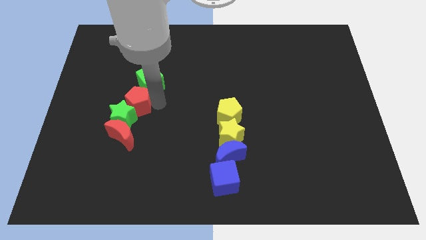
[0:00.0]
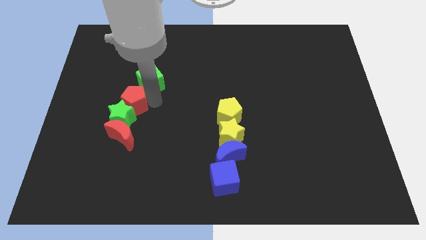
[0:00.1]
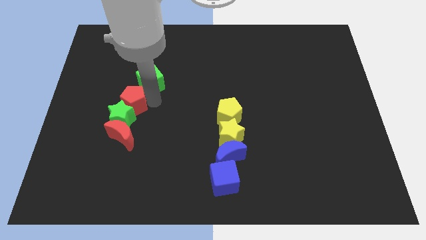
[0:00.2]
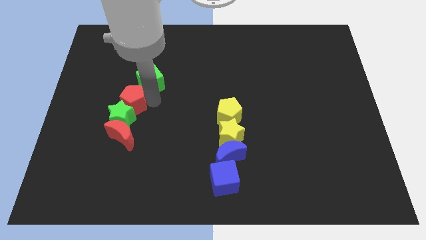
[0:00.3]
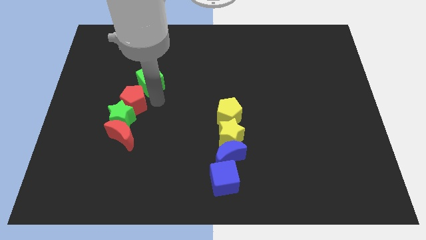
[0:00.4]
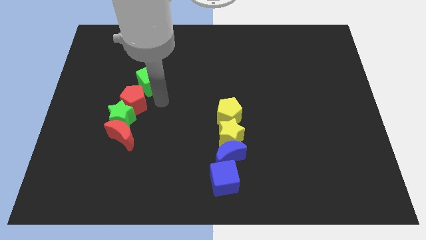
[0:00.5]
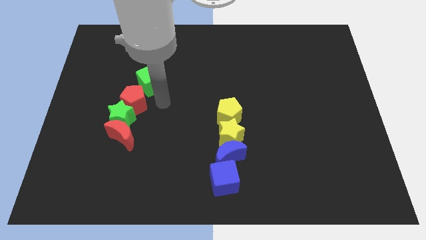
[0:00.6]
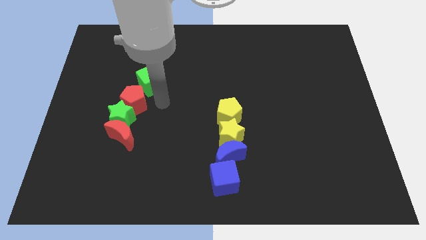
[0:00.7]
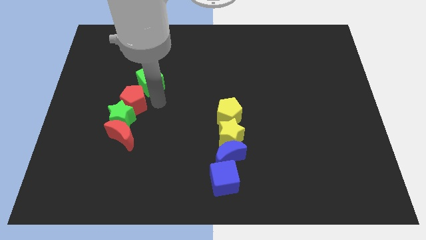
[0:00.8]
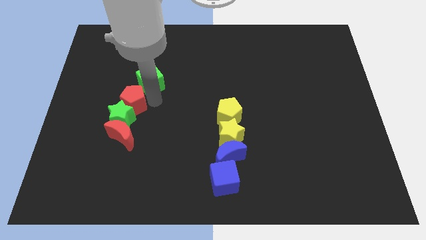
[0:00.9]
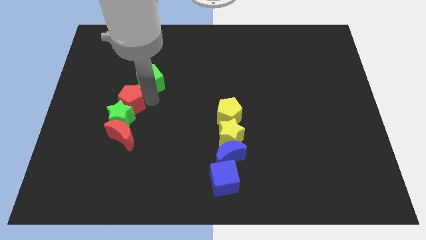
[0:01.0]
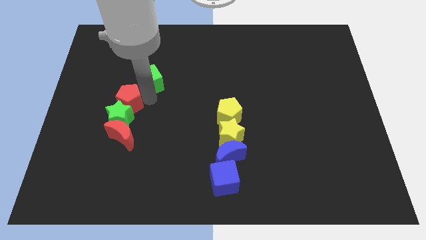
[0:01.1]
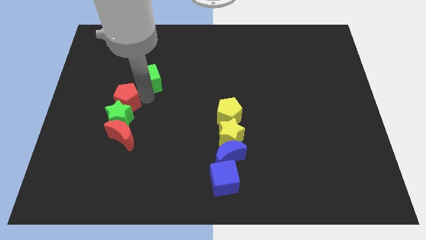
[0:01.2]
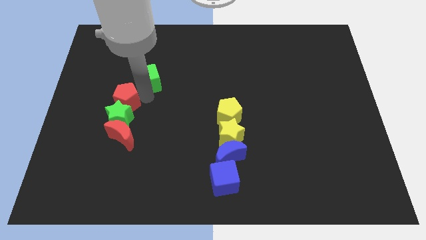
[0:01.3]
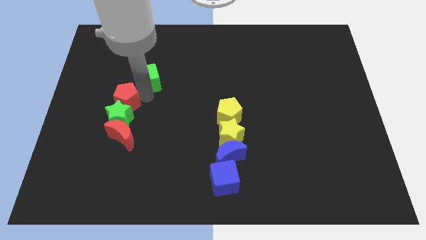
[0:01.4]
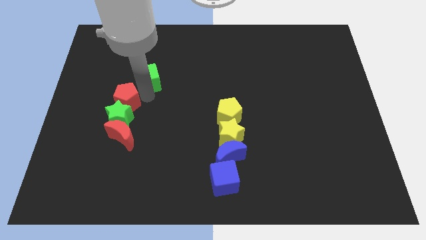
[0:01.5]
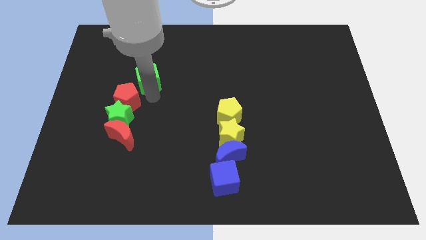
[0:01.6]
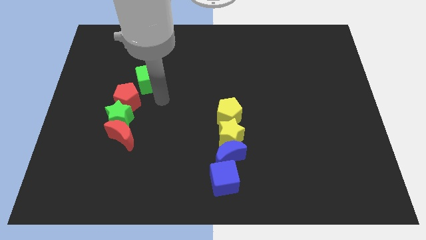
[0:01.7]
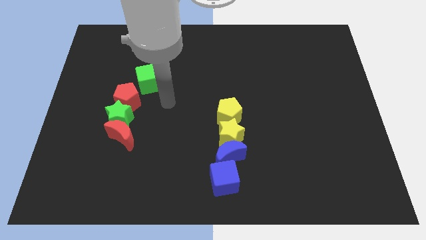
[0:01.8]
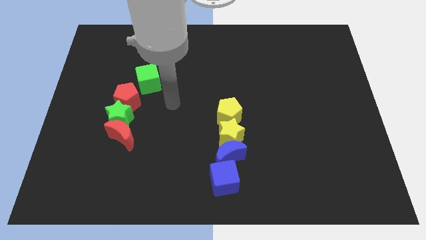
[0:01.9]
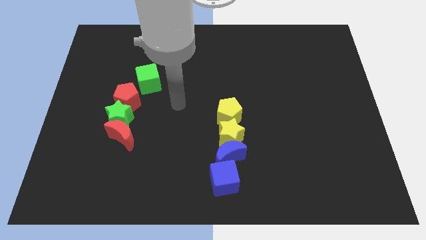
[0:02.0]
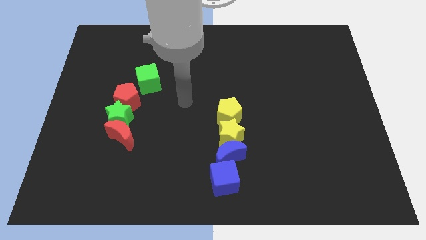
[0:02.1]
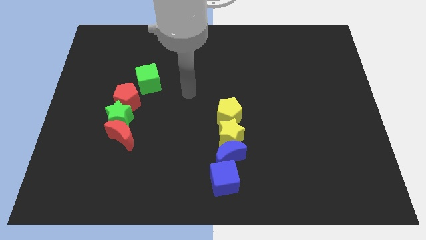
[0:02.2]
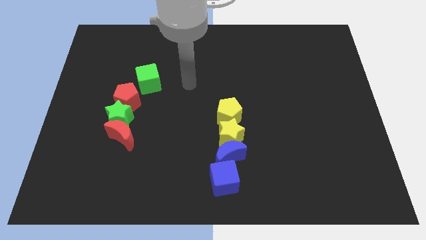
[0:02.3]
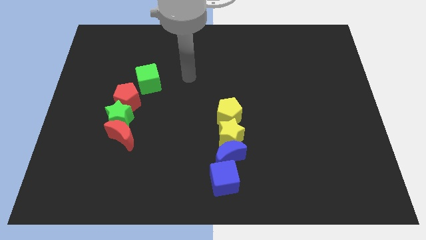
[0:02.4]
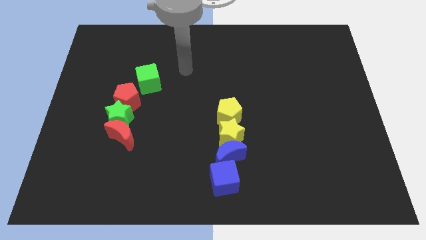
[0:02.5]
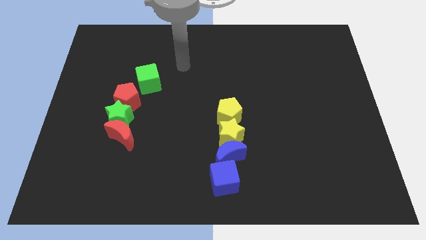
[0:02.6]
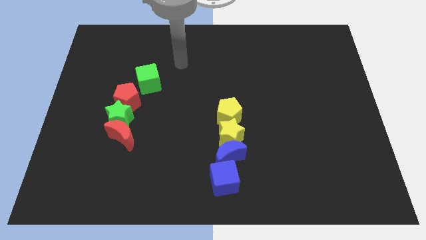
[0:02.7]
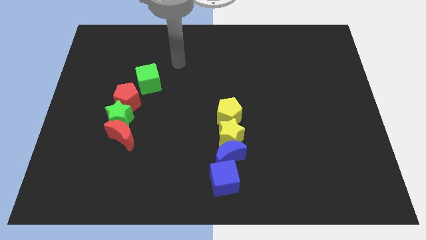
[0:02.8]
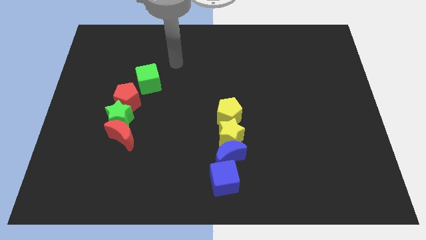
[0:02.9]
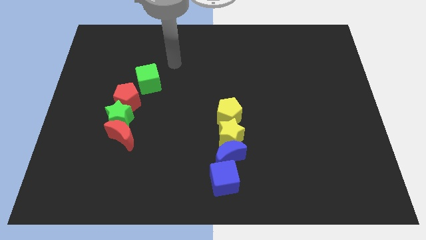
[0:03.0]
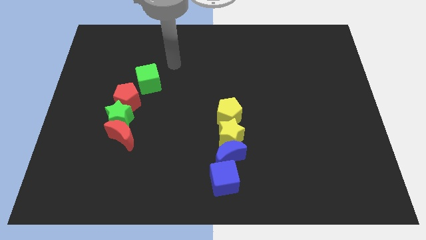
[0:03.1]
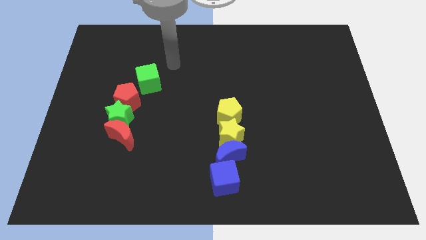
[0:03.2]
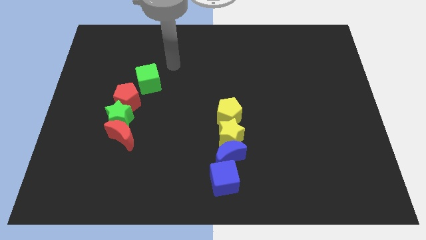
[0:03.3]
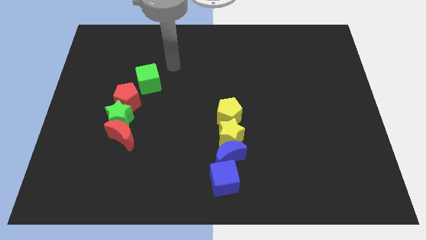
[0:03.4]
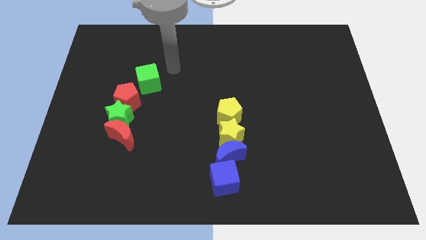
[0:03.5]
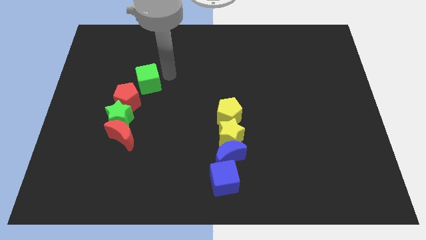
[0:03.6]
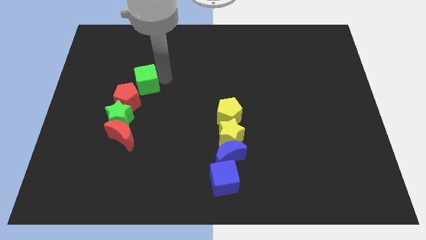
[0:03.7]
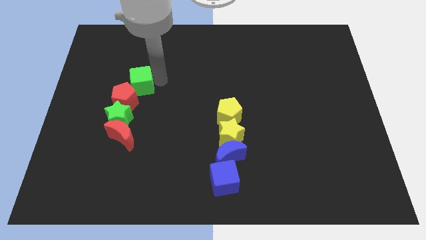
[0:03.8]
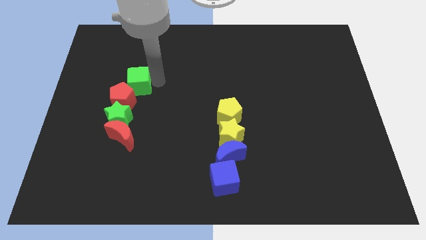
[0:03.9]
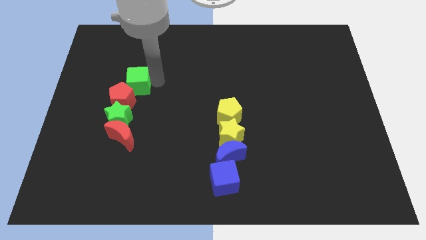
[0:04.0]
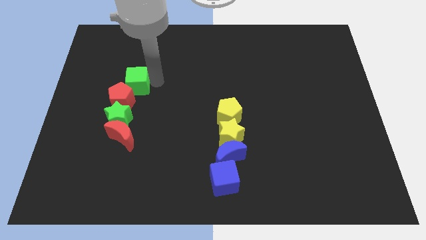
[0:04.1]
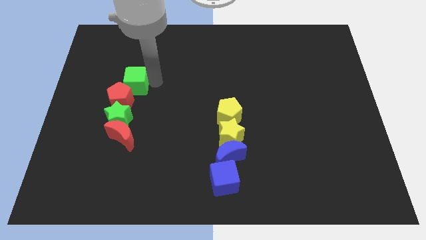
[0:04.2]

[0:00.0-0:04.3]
move your arm towards the green cube

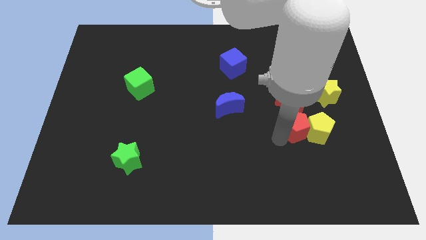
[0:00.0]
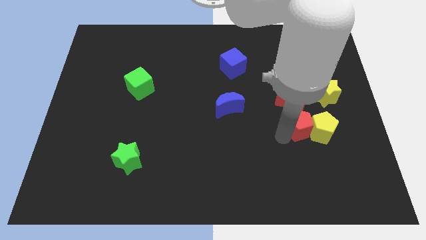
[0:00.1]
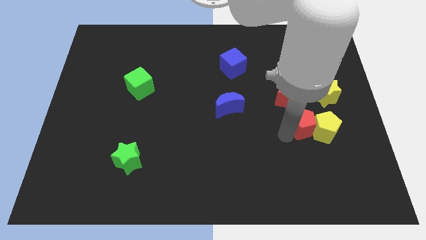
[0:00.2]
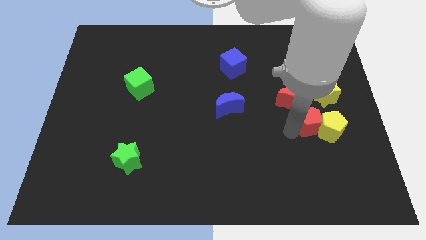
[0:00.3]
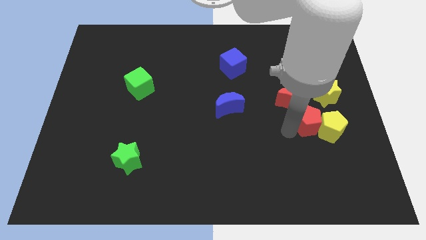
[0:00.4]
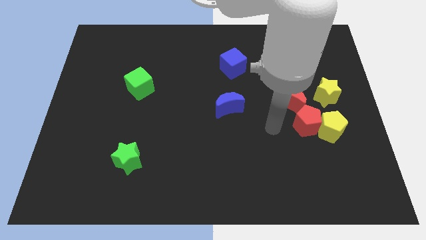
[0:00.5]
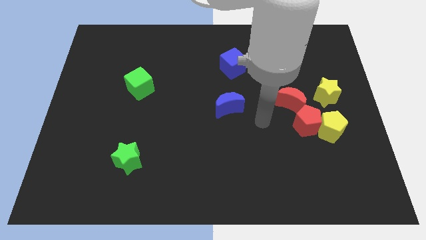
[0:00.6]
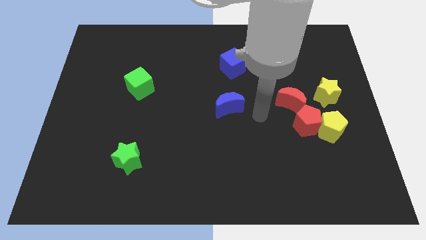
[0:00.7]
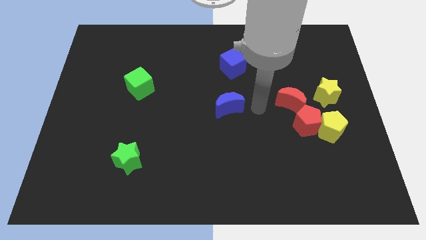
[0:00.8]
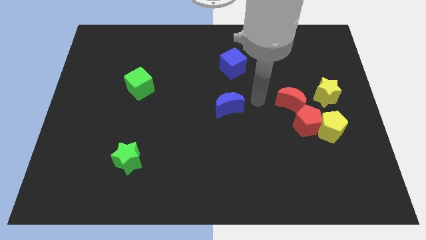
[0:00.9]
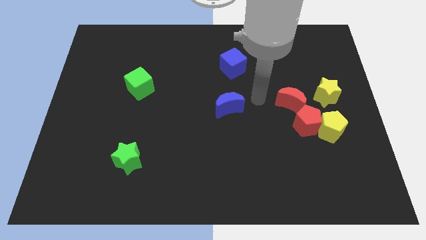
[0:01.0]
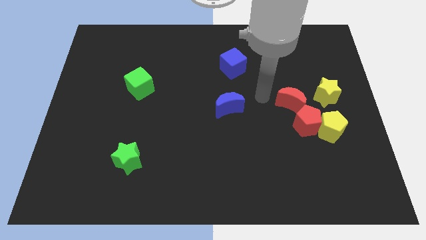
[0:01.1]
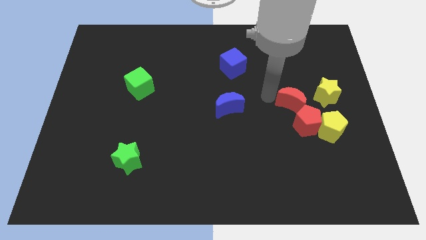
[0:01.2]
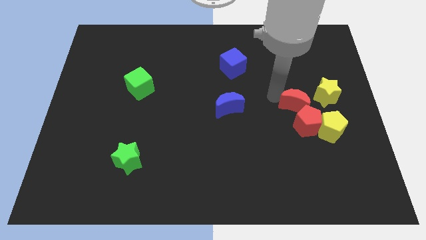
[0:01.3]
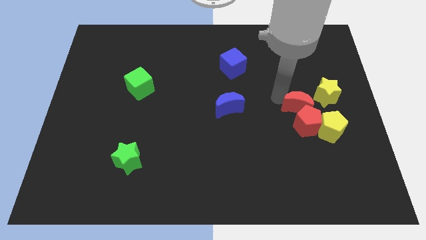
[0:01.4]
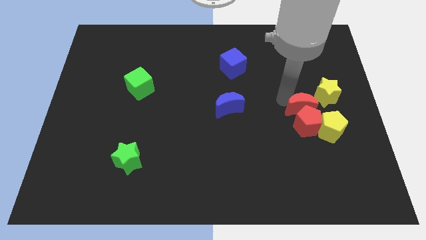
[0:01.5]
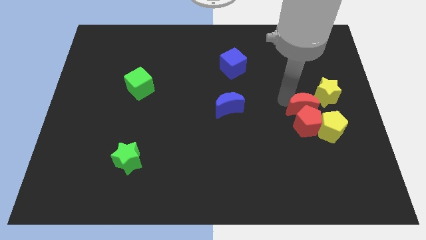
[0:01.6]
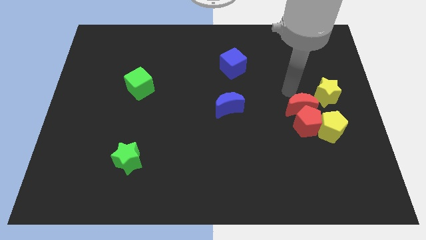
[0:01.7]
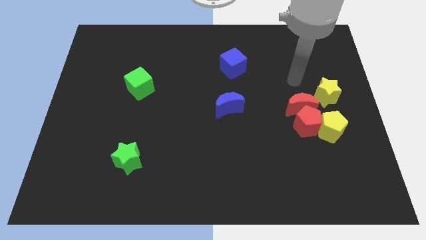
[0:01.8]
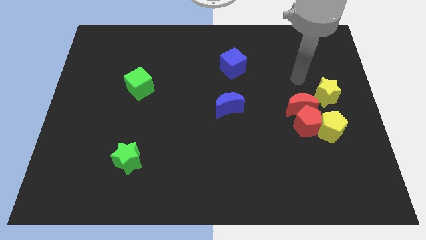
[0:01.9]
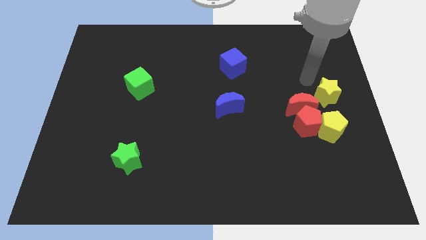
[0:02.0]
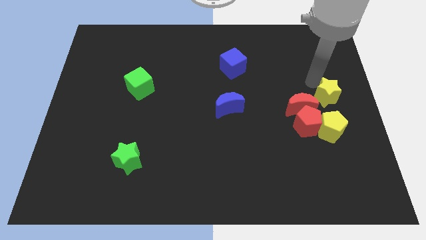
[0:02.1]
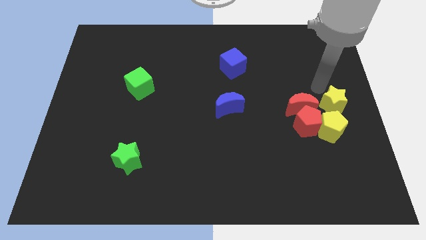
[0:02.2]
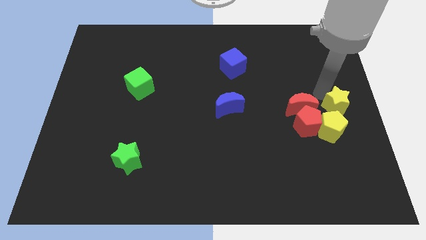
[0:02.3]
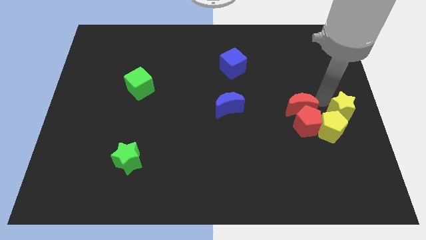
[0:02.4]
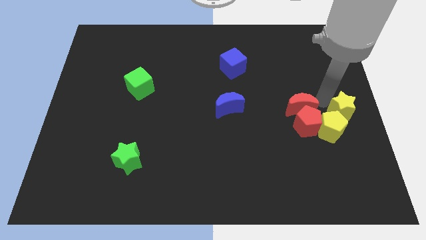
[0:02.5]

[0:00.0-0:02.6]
push the yellow star into the yellow pentagon

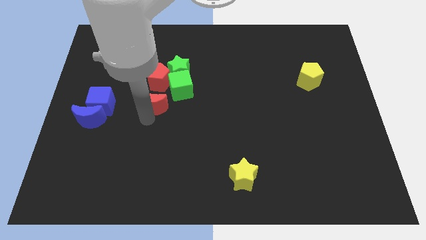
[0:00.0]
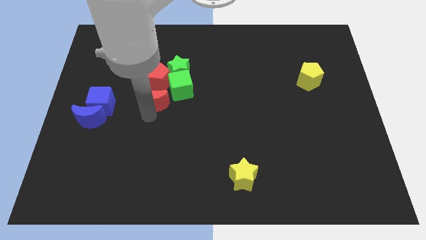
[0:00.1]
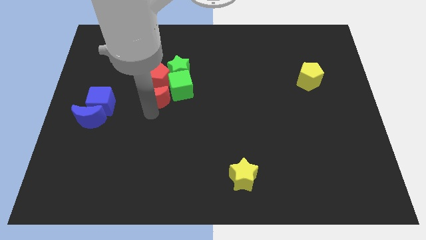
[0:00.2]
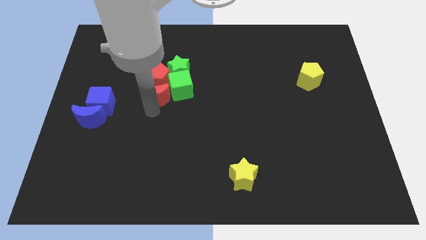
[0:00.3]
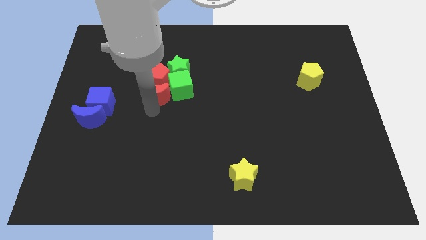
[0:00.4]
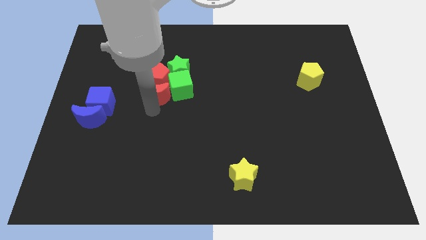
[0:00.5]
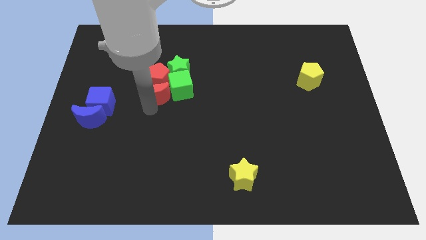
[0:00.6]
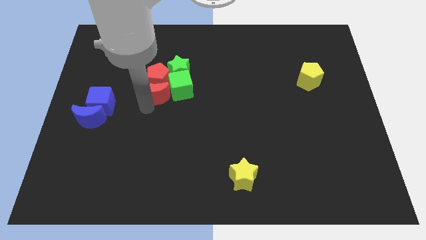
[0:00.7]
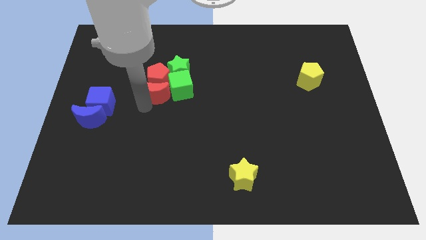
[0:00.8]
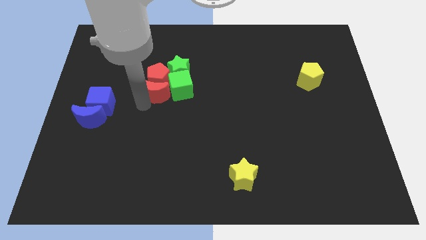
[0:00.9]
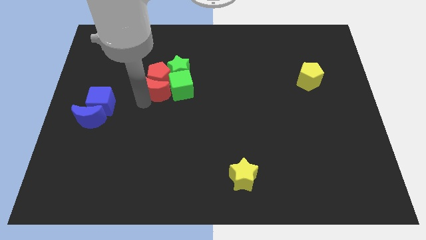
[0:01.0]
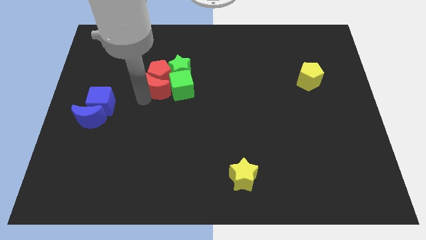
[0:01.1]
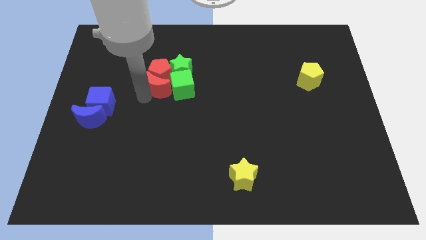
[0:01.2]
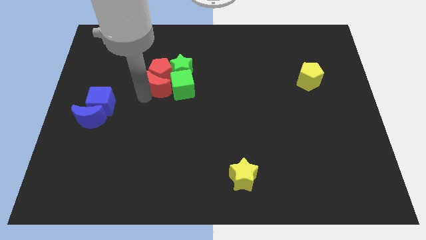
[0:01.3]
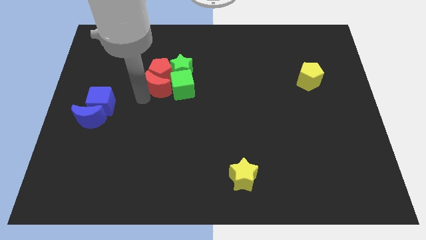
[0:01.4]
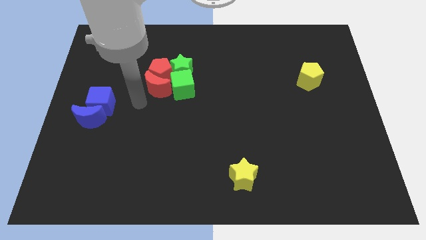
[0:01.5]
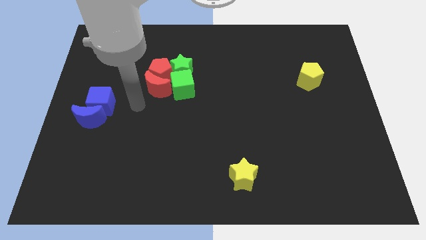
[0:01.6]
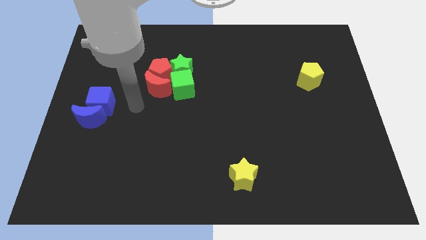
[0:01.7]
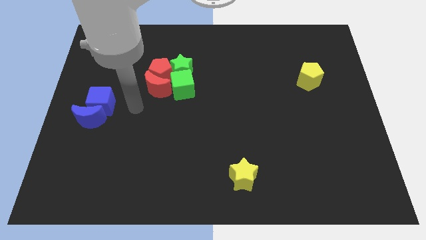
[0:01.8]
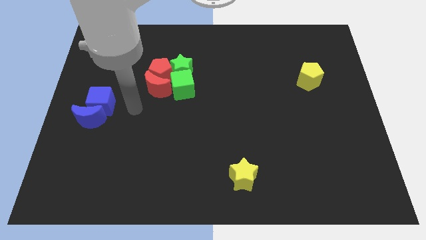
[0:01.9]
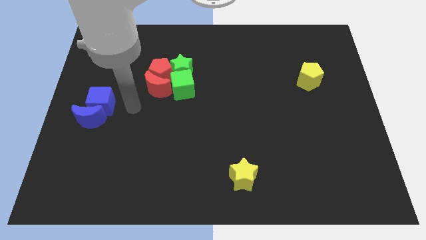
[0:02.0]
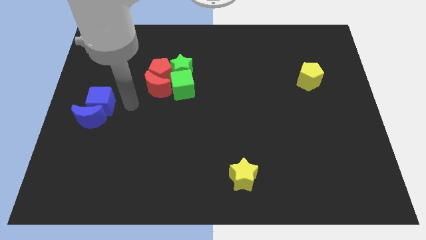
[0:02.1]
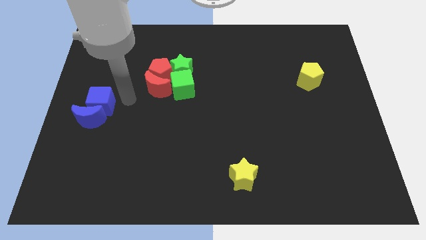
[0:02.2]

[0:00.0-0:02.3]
push the red moon into the group of blocks
